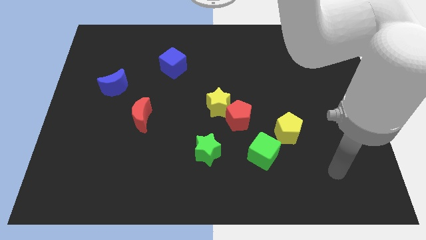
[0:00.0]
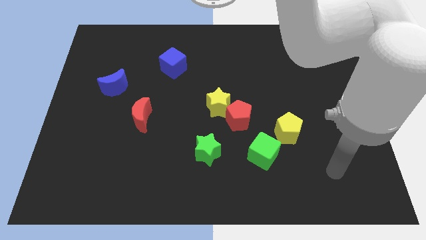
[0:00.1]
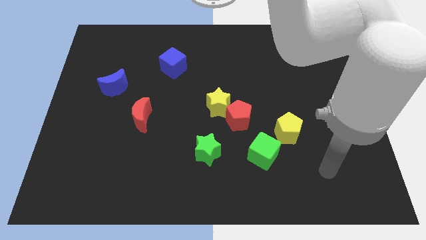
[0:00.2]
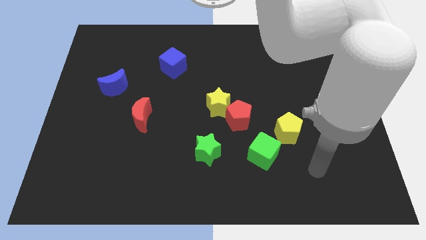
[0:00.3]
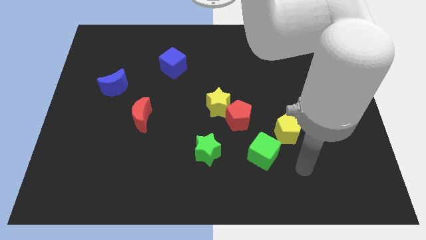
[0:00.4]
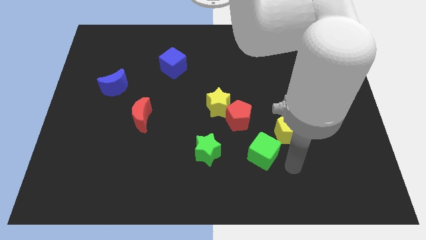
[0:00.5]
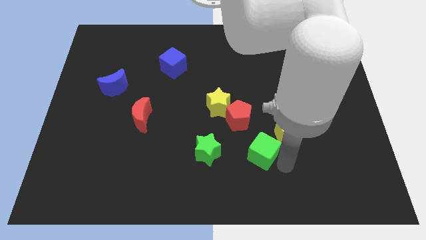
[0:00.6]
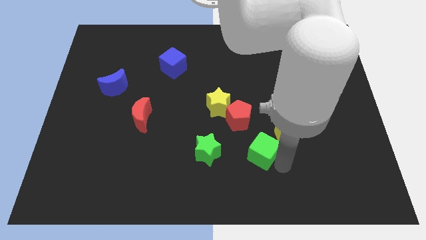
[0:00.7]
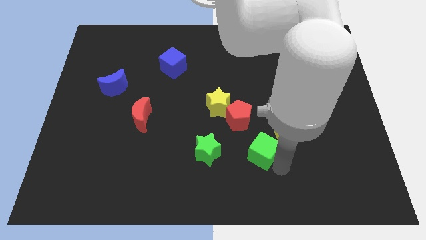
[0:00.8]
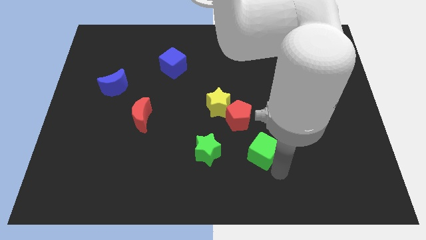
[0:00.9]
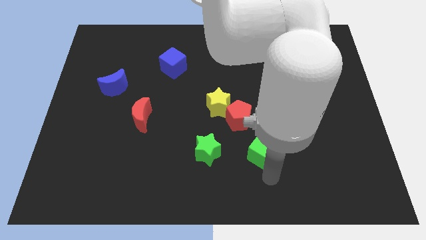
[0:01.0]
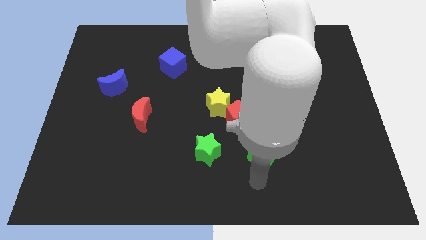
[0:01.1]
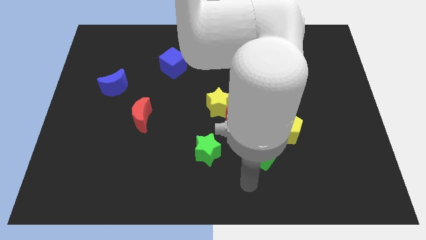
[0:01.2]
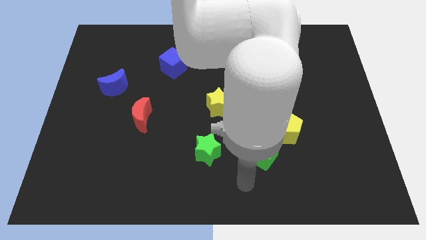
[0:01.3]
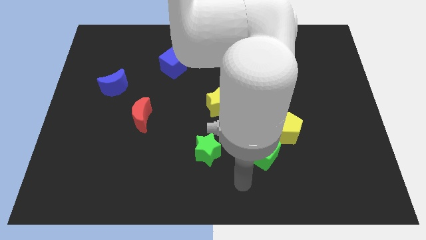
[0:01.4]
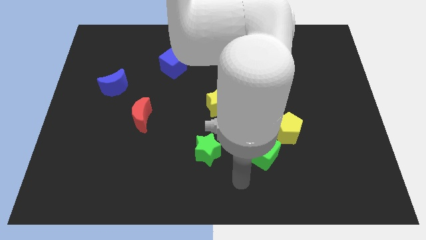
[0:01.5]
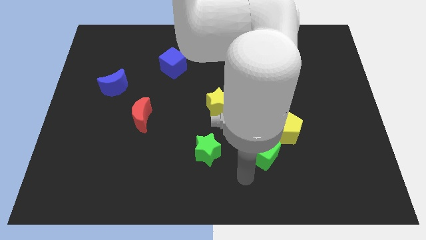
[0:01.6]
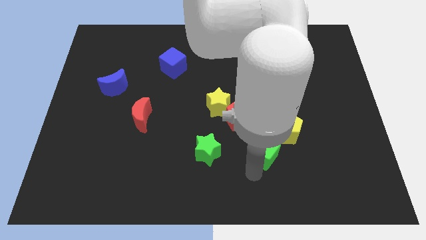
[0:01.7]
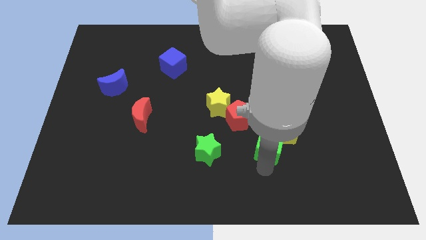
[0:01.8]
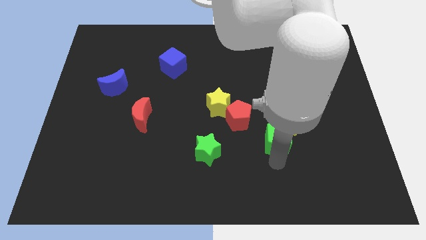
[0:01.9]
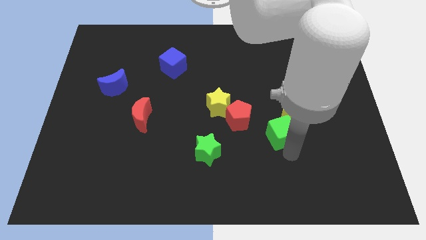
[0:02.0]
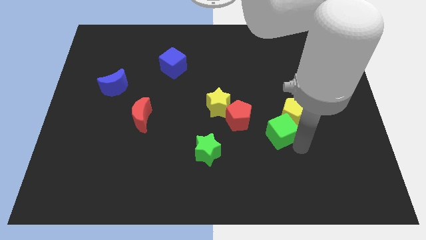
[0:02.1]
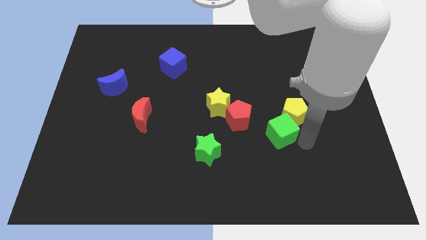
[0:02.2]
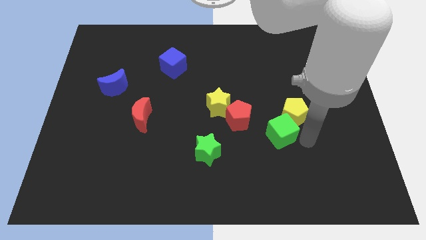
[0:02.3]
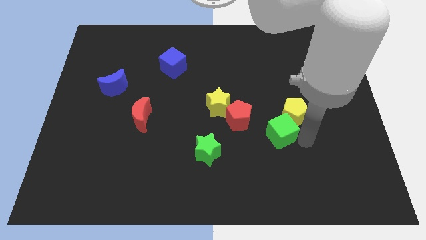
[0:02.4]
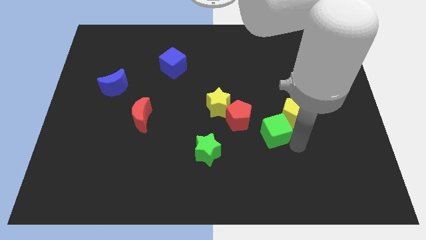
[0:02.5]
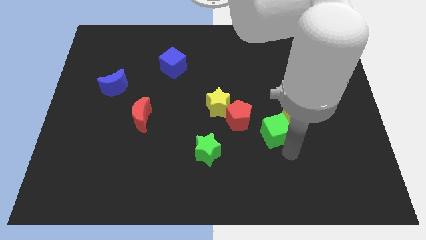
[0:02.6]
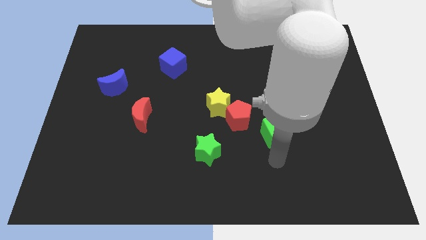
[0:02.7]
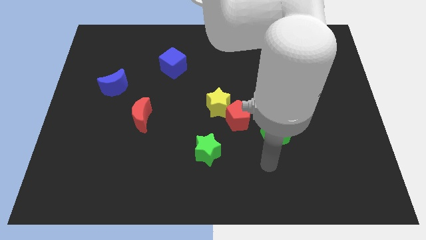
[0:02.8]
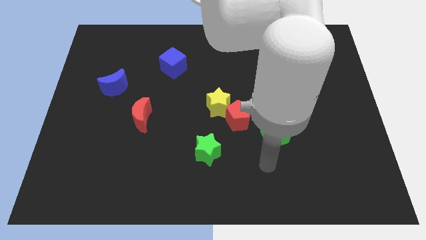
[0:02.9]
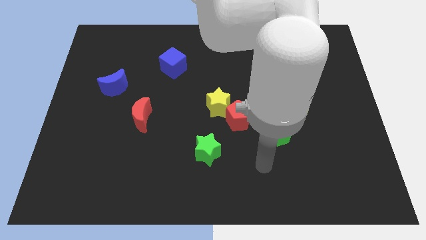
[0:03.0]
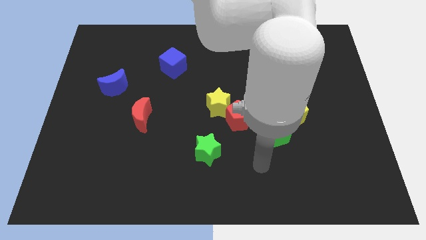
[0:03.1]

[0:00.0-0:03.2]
slide up yellow pentagon and green cube to the center

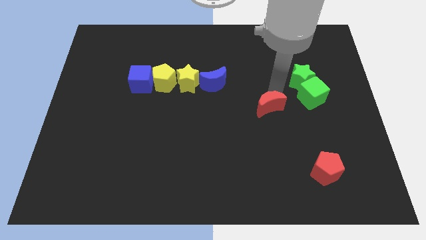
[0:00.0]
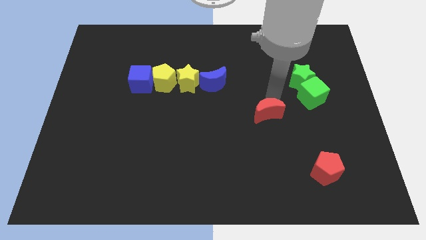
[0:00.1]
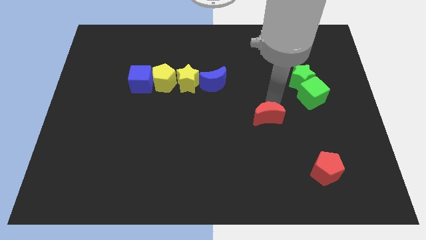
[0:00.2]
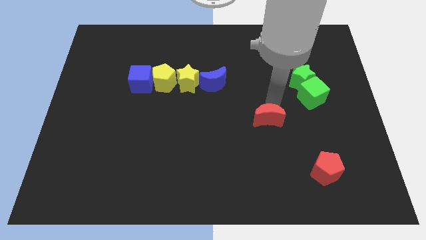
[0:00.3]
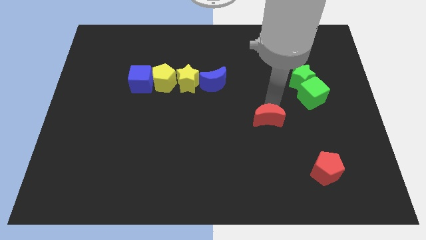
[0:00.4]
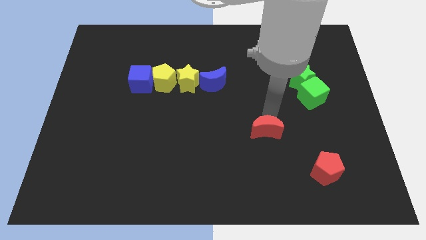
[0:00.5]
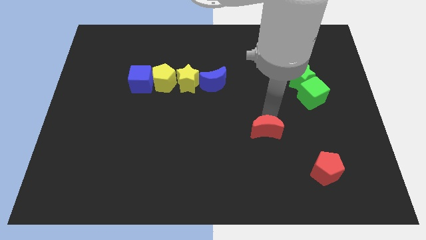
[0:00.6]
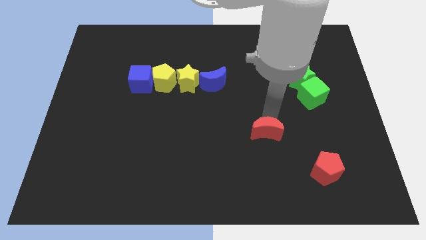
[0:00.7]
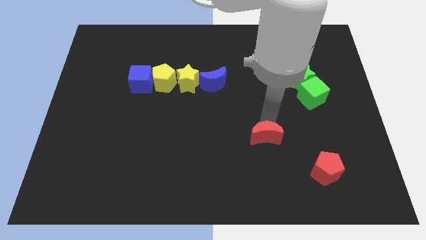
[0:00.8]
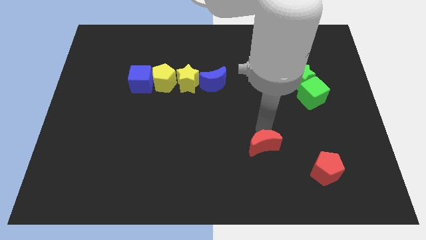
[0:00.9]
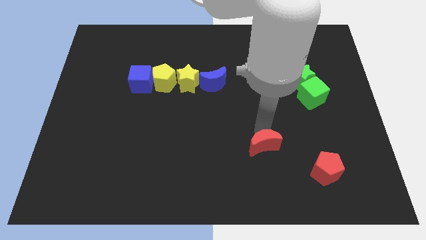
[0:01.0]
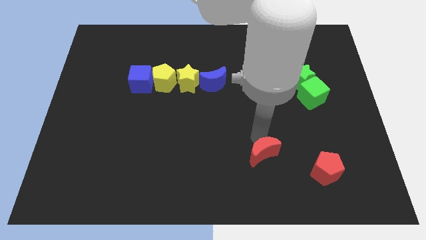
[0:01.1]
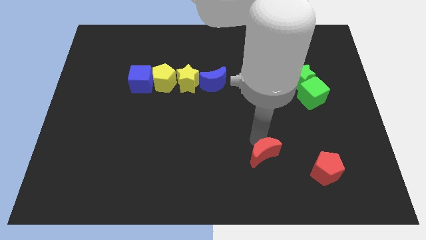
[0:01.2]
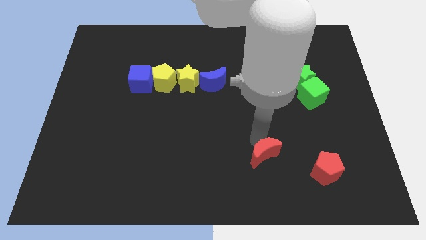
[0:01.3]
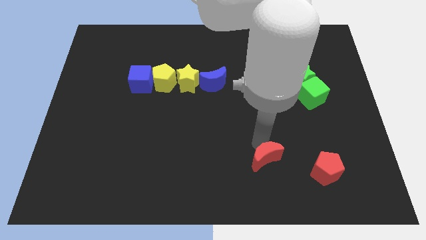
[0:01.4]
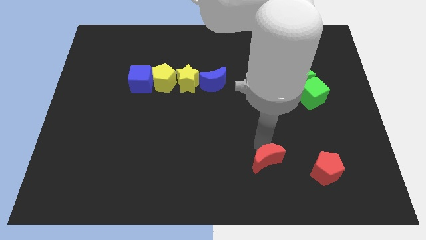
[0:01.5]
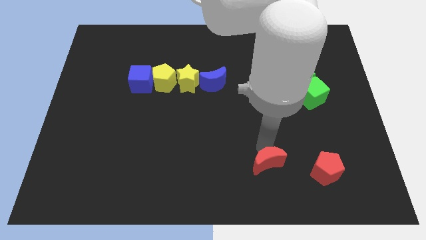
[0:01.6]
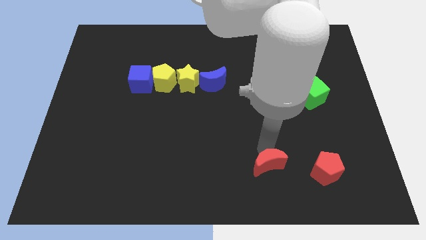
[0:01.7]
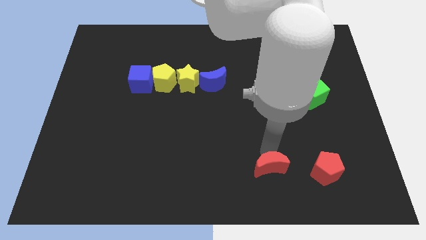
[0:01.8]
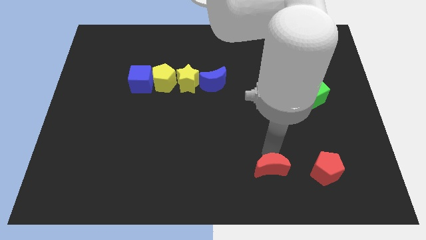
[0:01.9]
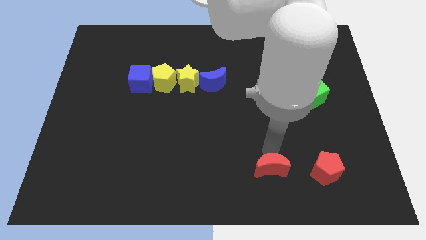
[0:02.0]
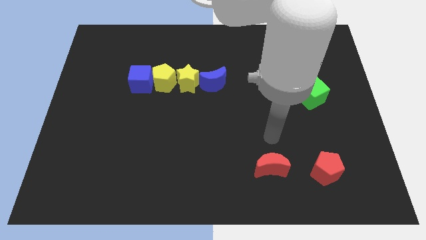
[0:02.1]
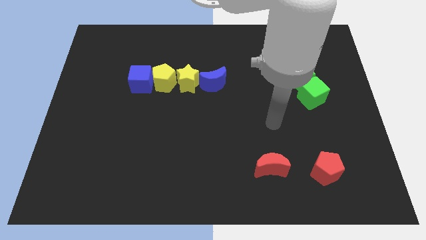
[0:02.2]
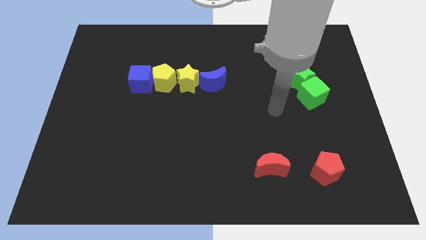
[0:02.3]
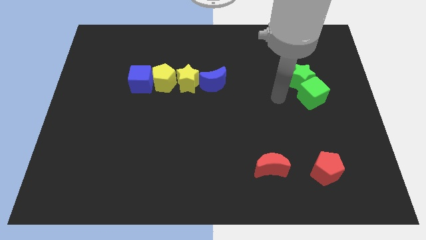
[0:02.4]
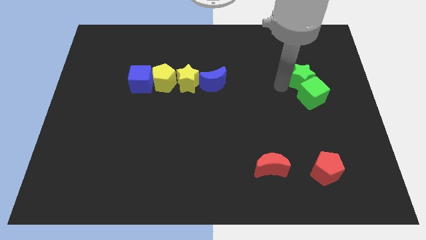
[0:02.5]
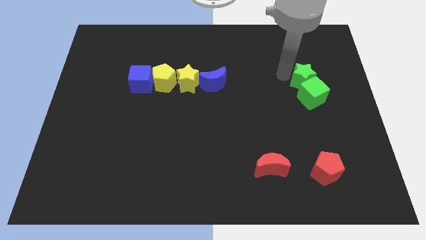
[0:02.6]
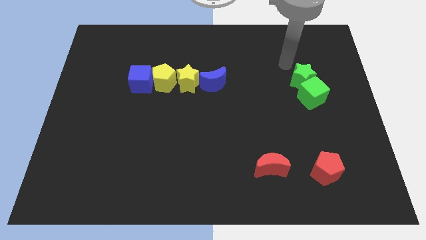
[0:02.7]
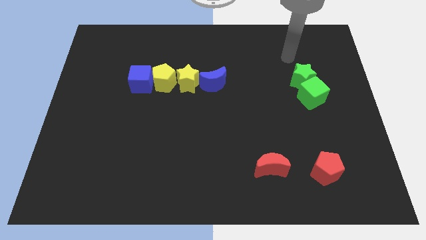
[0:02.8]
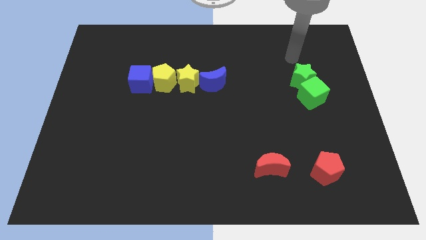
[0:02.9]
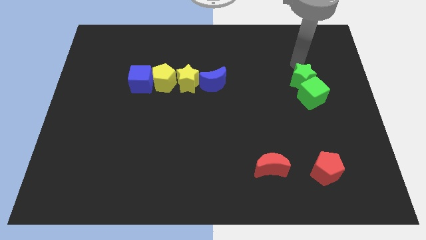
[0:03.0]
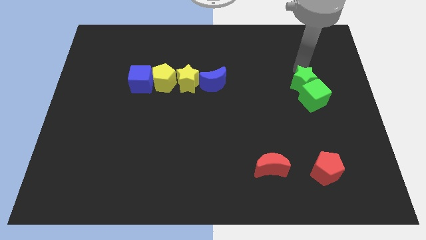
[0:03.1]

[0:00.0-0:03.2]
place the red crescent to the left of red pentagon

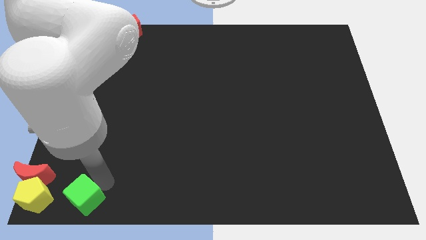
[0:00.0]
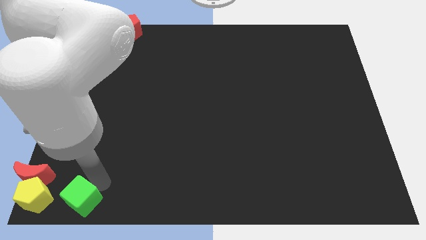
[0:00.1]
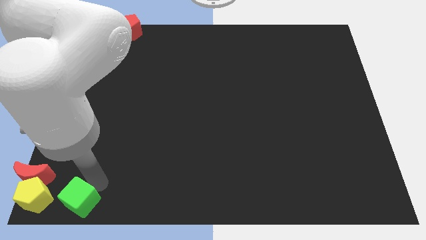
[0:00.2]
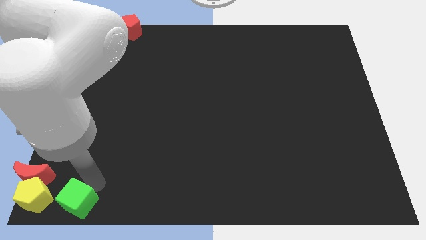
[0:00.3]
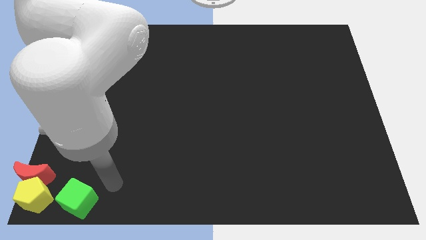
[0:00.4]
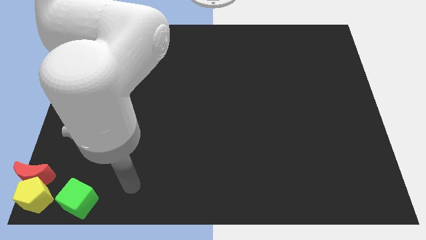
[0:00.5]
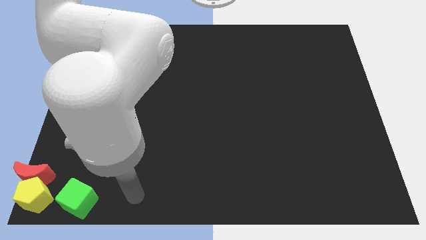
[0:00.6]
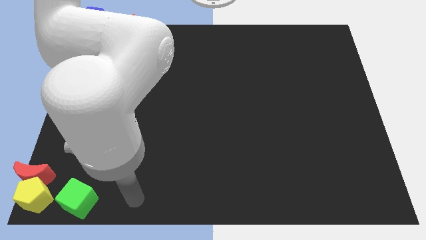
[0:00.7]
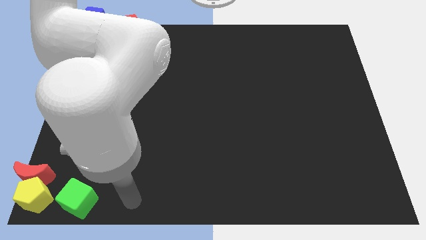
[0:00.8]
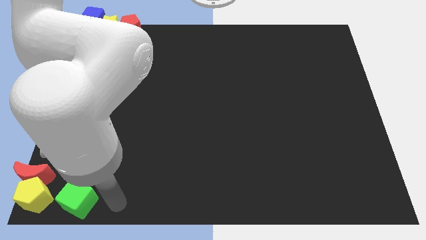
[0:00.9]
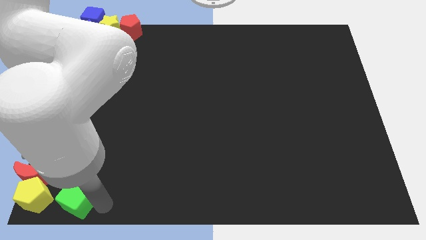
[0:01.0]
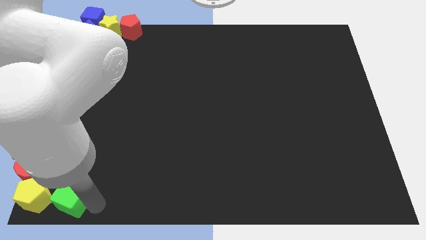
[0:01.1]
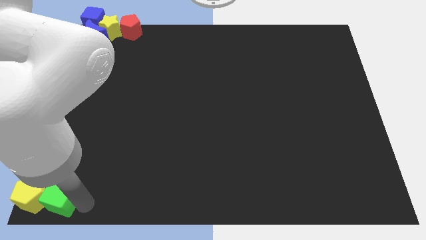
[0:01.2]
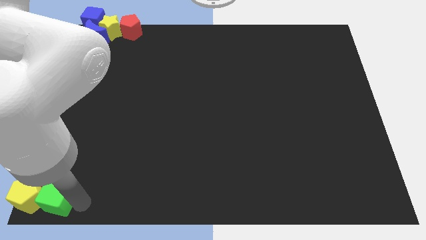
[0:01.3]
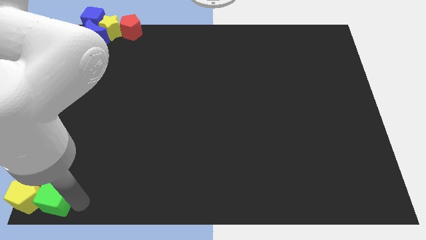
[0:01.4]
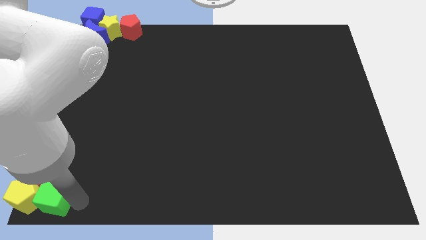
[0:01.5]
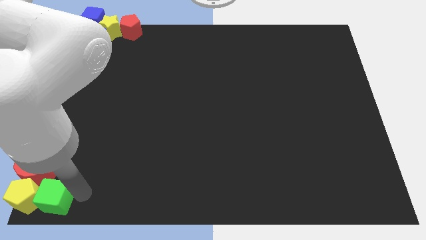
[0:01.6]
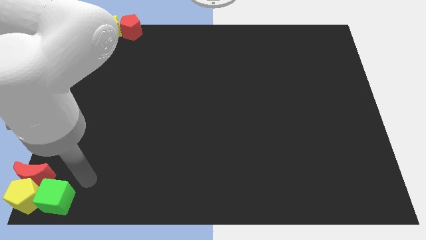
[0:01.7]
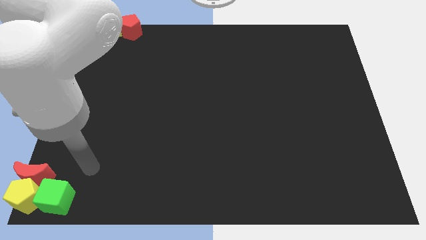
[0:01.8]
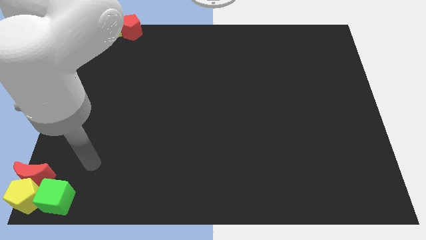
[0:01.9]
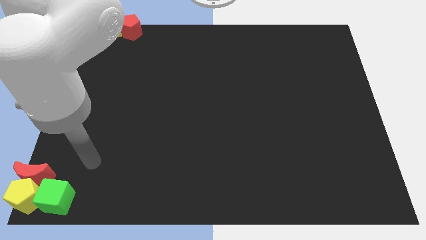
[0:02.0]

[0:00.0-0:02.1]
push the green cube into yellow pentagon

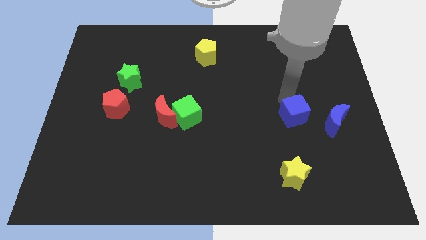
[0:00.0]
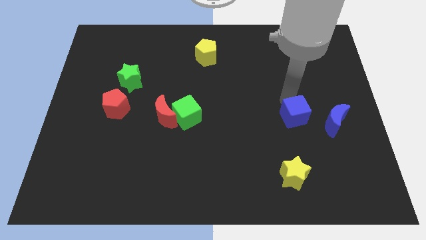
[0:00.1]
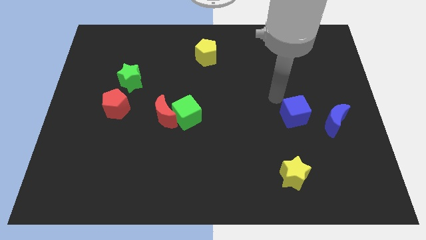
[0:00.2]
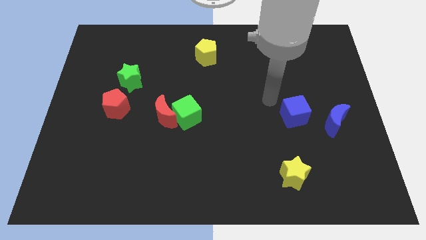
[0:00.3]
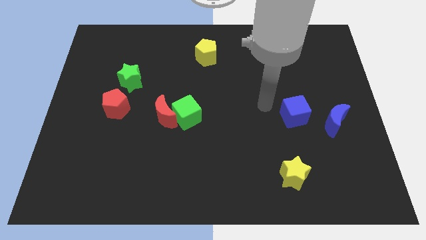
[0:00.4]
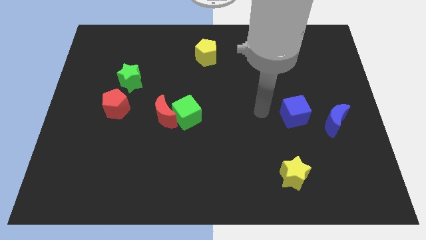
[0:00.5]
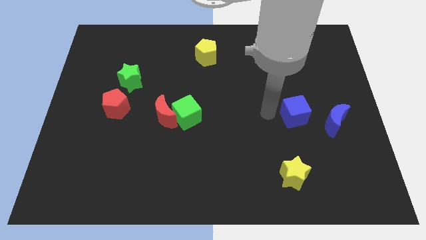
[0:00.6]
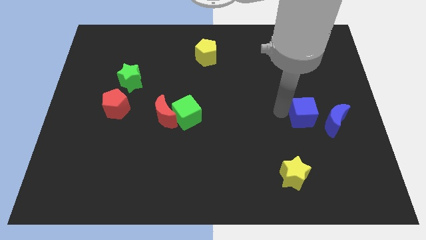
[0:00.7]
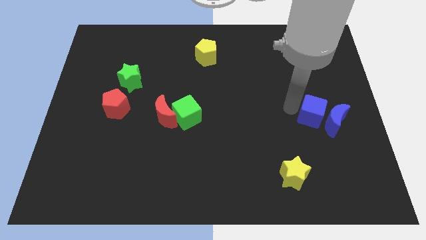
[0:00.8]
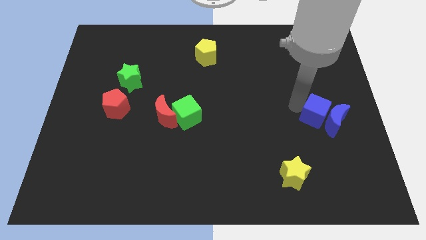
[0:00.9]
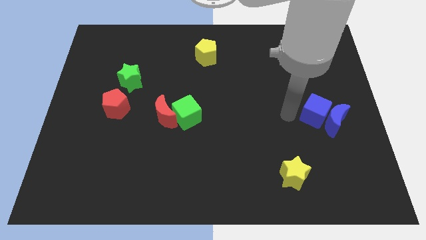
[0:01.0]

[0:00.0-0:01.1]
place the blue cube close to the blue crescent
